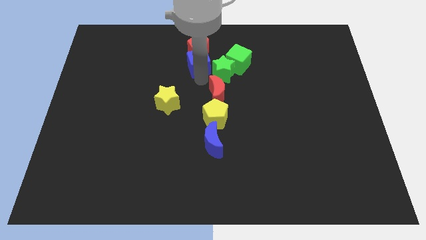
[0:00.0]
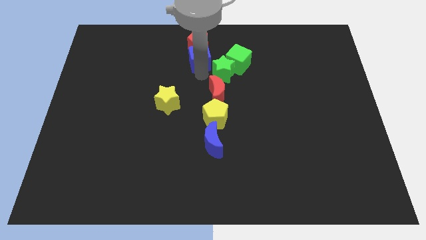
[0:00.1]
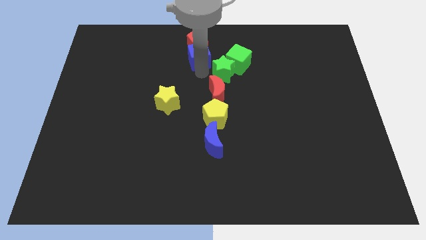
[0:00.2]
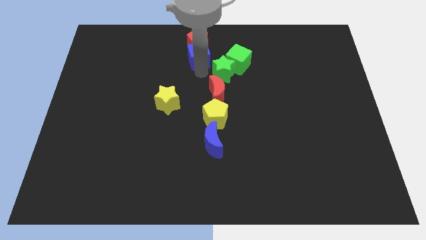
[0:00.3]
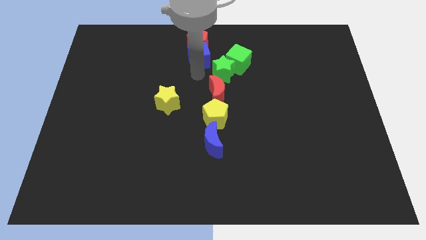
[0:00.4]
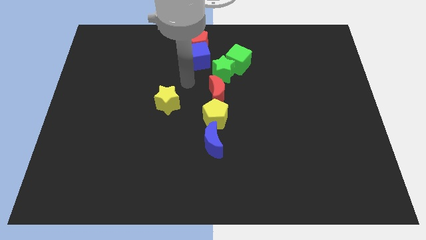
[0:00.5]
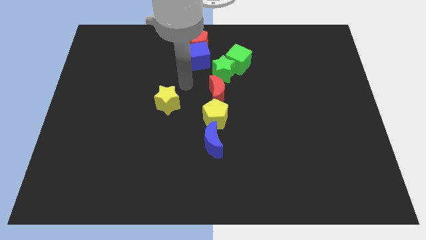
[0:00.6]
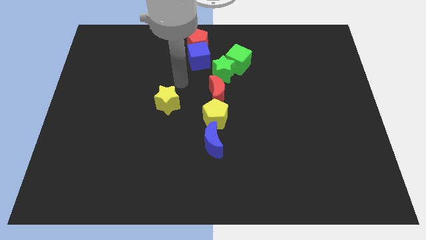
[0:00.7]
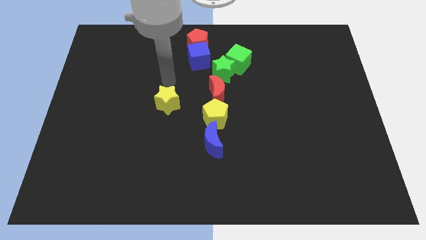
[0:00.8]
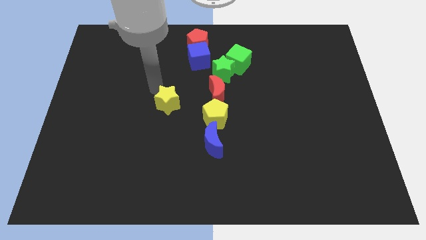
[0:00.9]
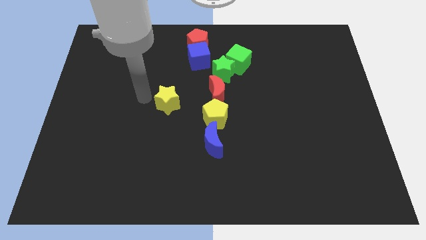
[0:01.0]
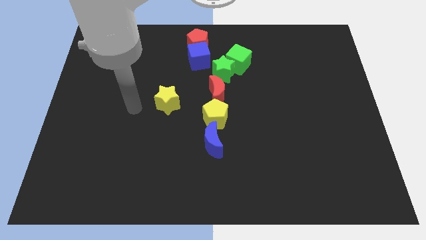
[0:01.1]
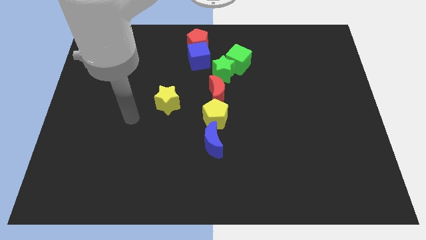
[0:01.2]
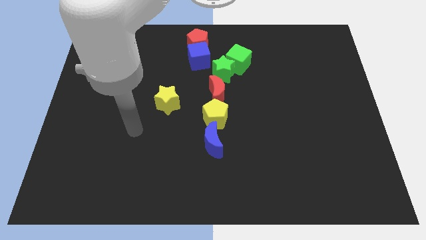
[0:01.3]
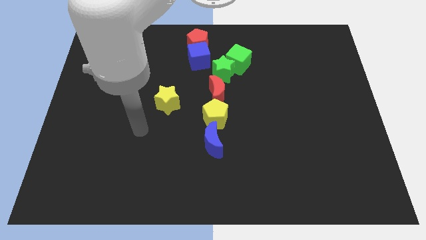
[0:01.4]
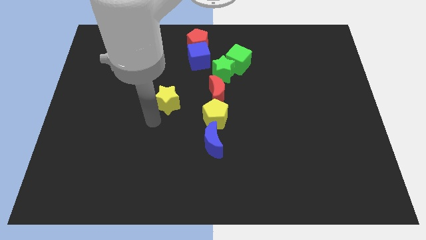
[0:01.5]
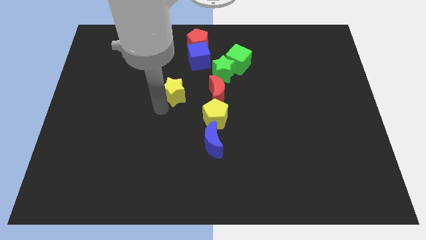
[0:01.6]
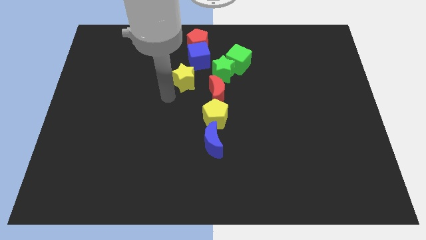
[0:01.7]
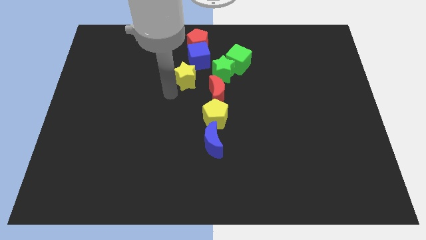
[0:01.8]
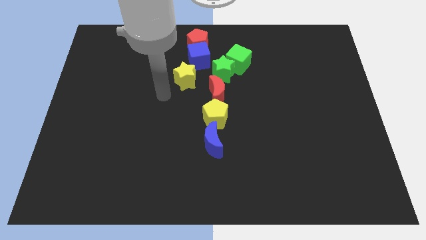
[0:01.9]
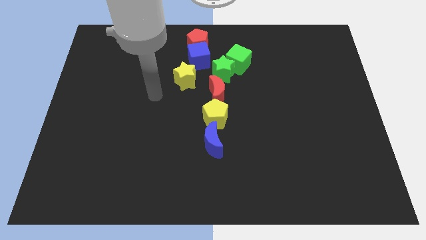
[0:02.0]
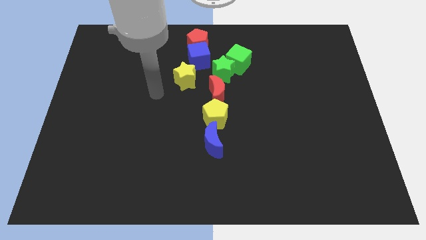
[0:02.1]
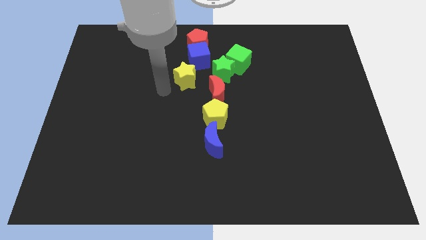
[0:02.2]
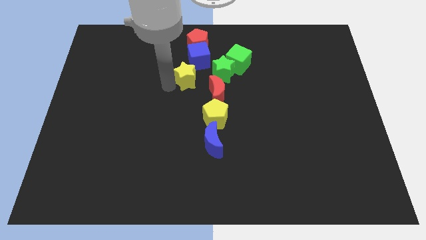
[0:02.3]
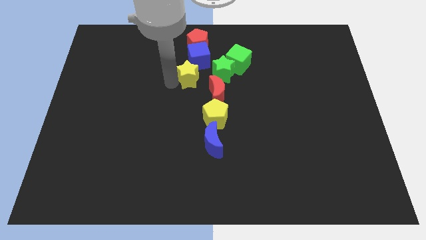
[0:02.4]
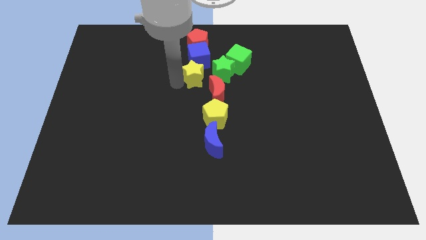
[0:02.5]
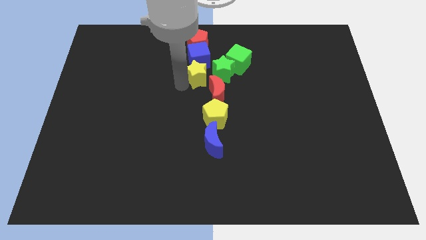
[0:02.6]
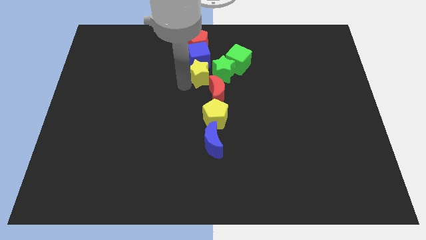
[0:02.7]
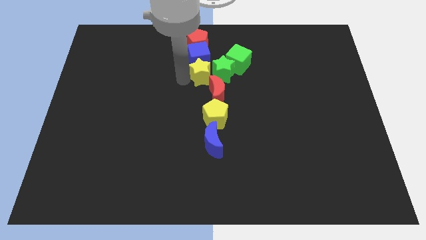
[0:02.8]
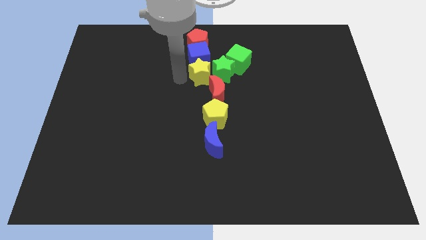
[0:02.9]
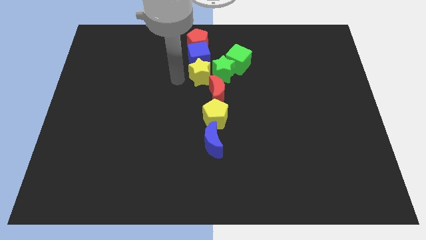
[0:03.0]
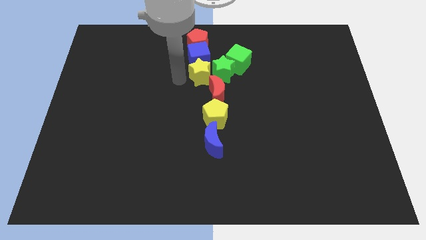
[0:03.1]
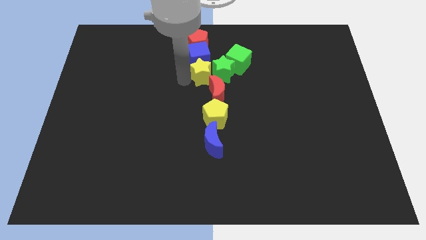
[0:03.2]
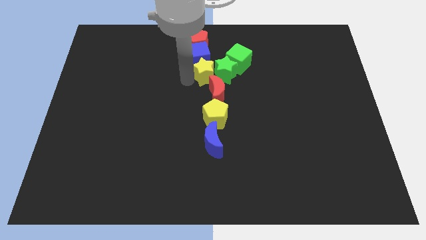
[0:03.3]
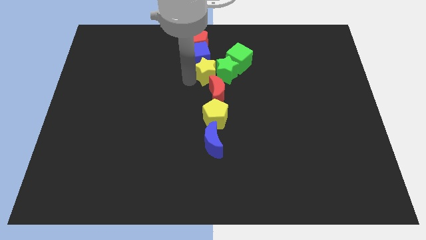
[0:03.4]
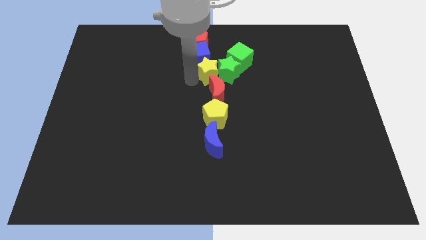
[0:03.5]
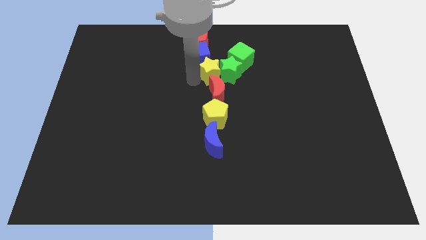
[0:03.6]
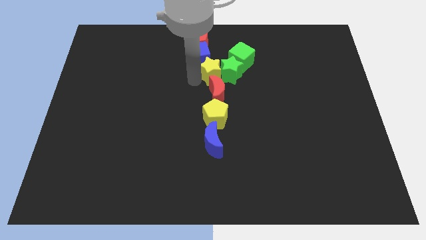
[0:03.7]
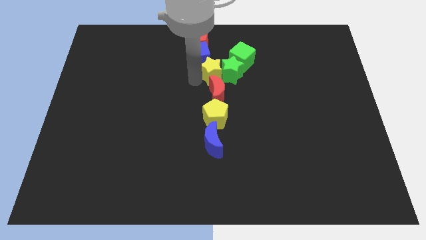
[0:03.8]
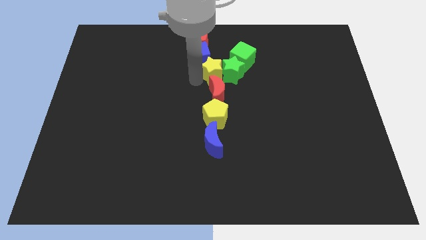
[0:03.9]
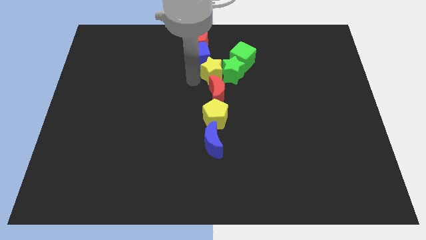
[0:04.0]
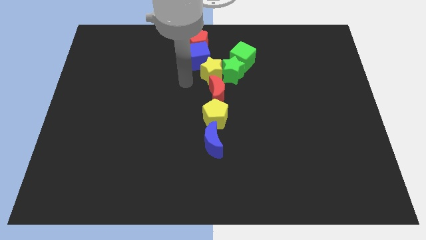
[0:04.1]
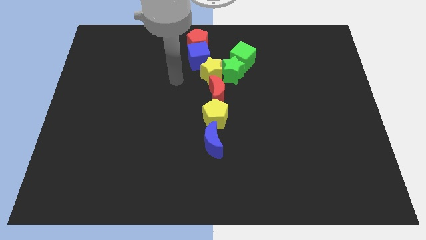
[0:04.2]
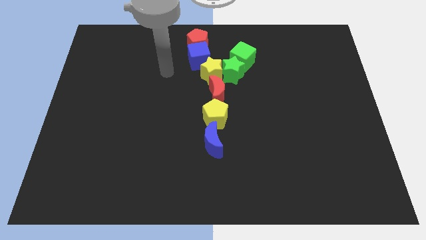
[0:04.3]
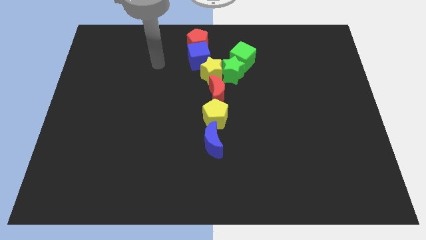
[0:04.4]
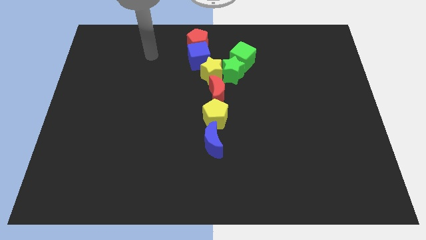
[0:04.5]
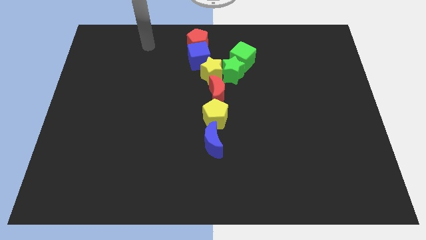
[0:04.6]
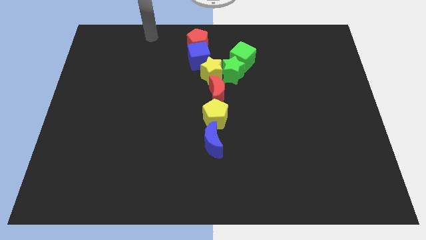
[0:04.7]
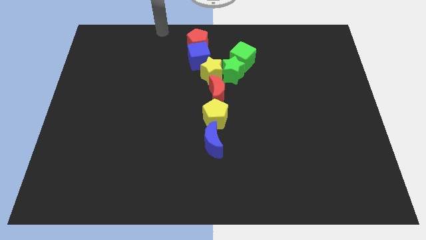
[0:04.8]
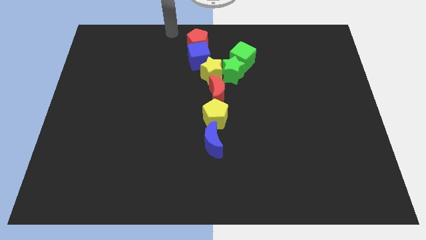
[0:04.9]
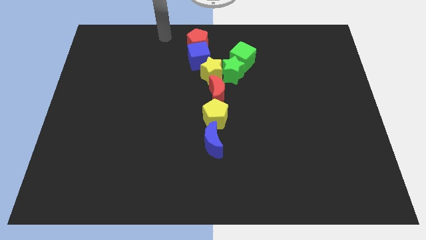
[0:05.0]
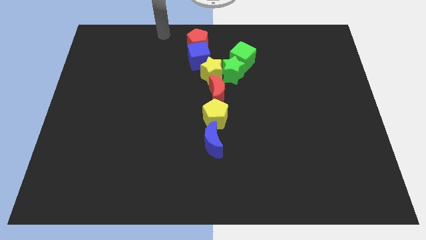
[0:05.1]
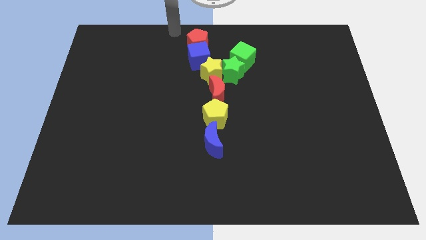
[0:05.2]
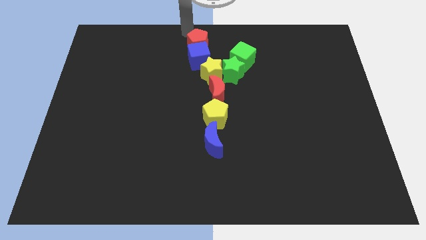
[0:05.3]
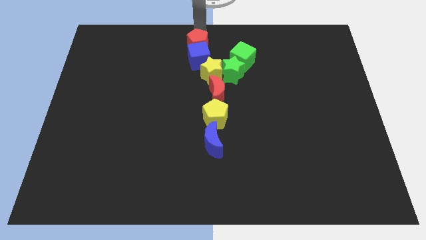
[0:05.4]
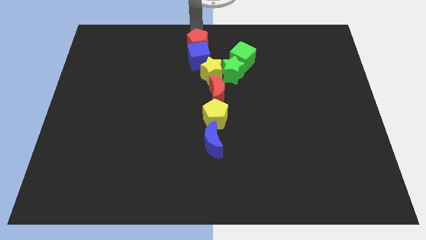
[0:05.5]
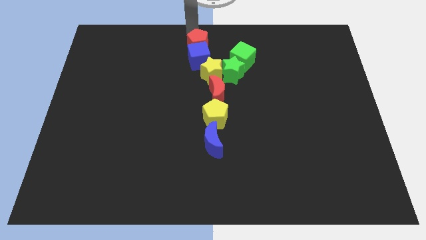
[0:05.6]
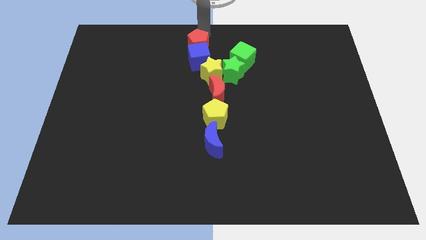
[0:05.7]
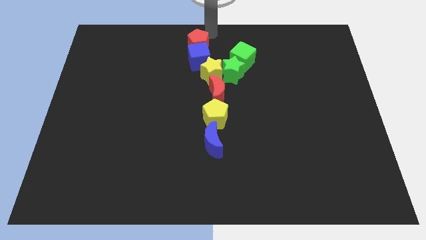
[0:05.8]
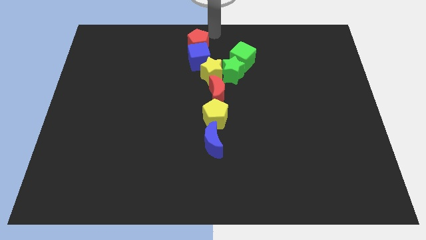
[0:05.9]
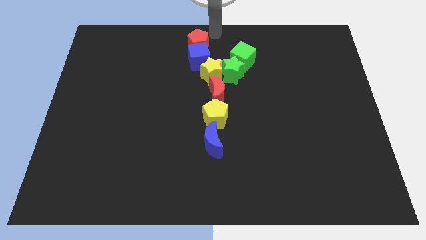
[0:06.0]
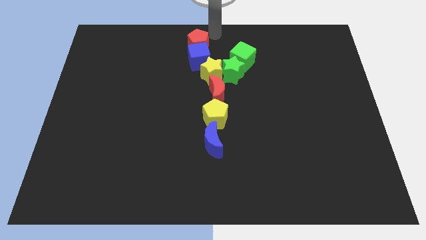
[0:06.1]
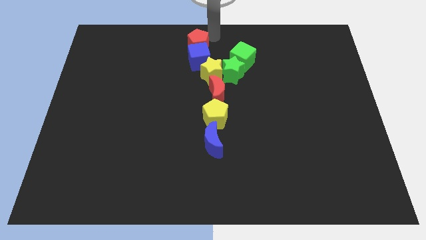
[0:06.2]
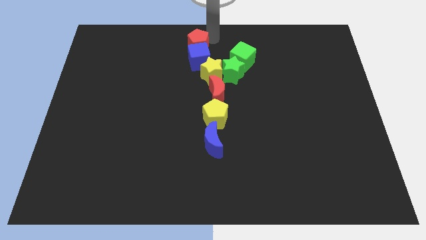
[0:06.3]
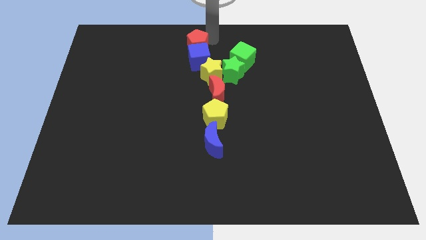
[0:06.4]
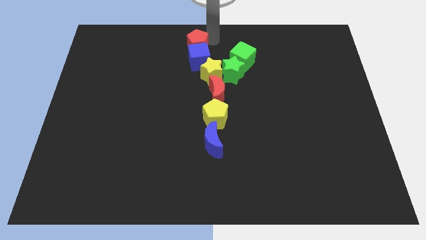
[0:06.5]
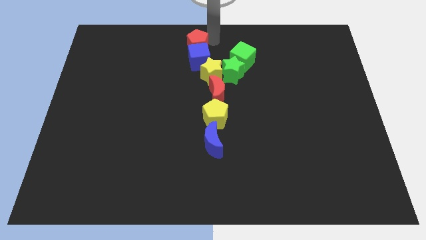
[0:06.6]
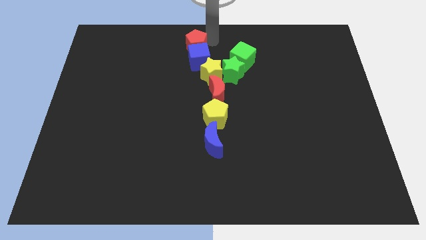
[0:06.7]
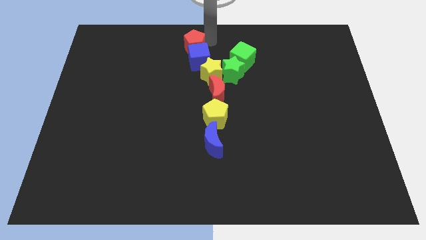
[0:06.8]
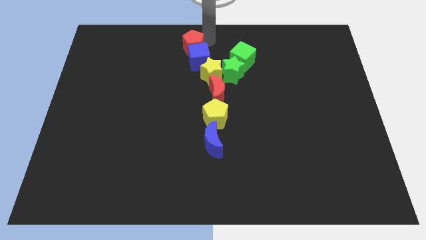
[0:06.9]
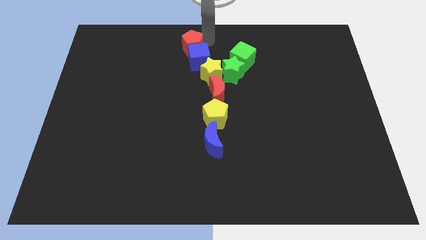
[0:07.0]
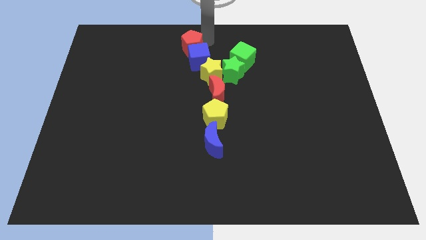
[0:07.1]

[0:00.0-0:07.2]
place the yellow star in the middle of the blue cube and the red moon

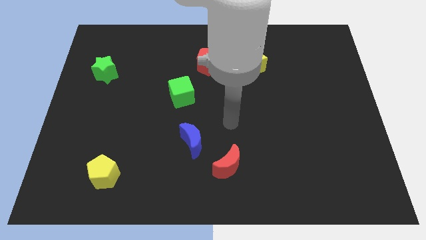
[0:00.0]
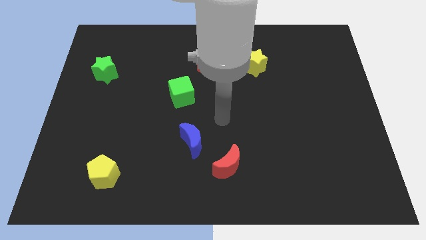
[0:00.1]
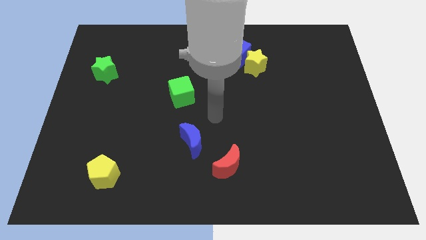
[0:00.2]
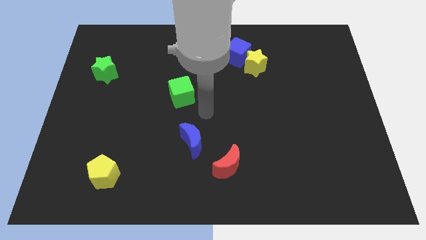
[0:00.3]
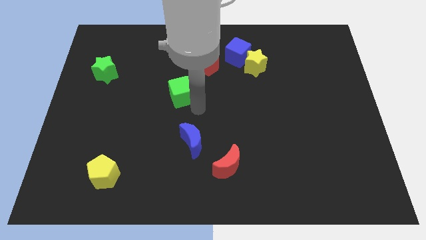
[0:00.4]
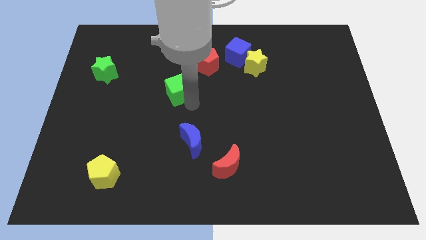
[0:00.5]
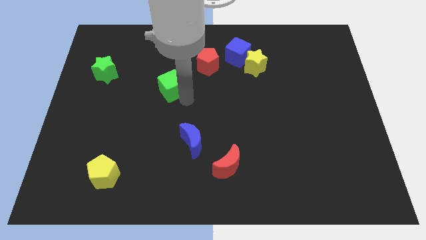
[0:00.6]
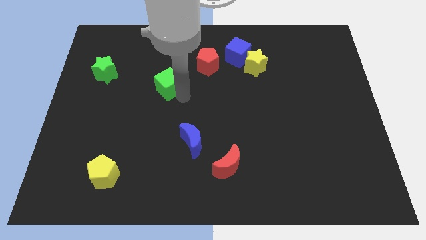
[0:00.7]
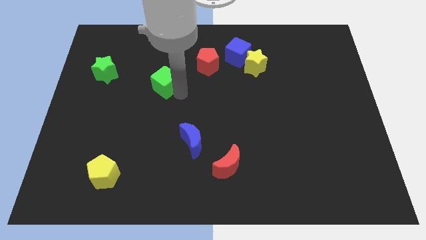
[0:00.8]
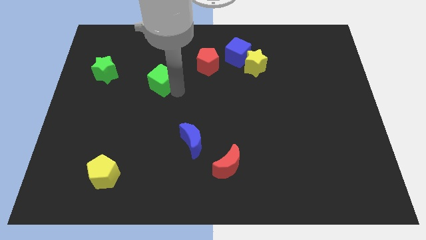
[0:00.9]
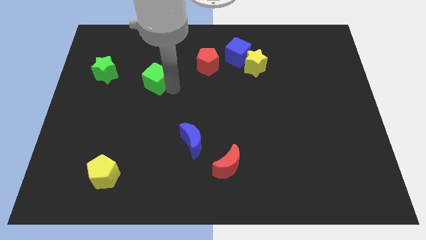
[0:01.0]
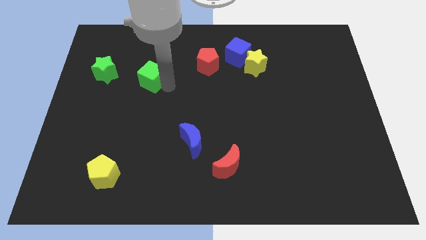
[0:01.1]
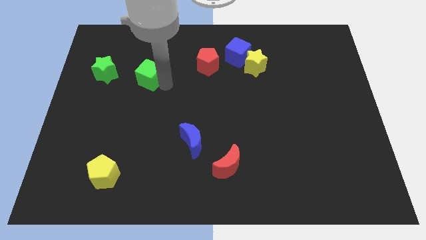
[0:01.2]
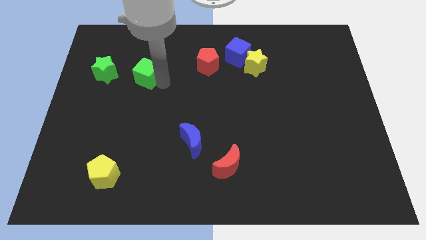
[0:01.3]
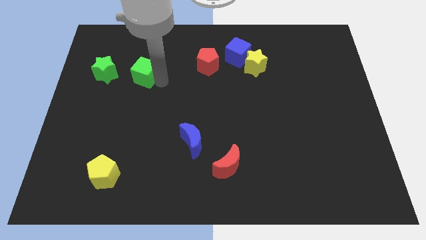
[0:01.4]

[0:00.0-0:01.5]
move the green cube to the right side of the green star

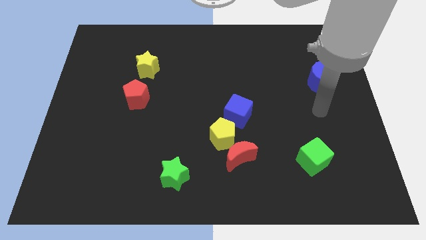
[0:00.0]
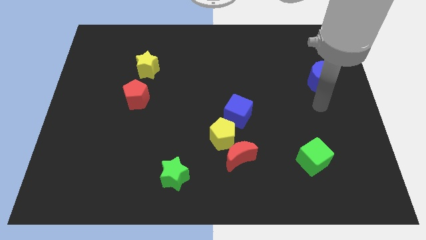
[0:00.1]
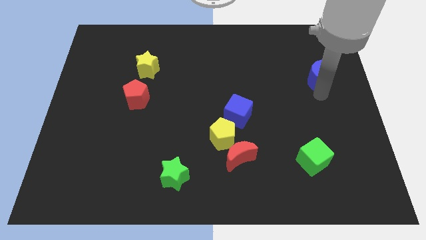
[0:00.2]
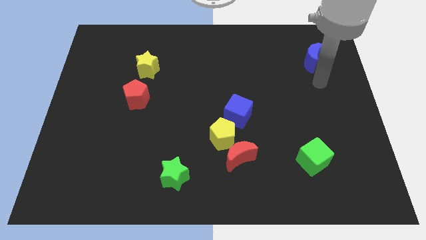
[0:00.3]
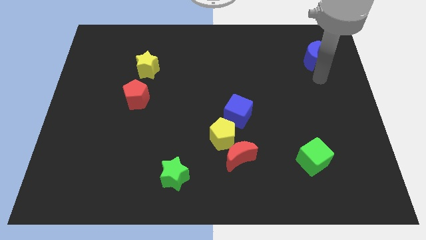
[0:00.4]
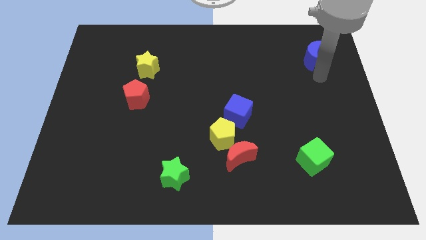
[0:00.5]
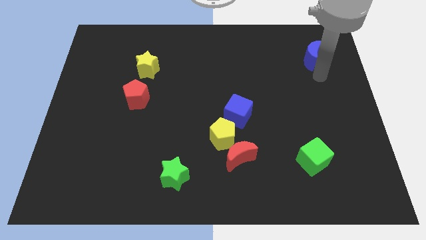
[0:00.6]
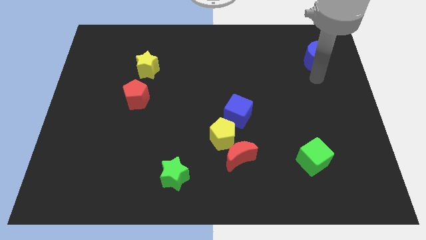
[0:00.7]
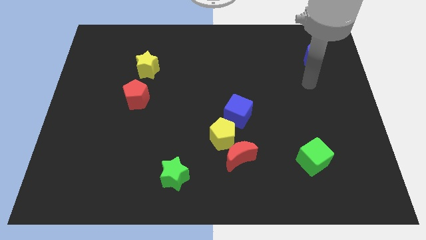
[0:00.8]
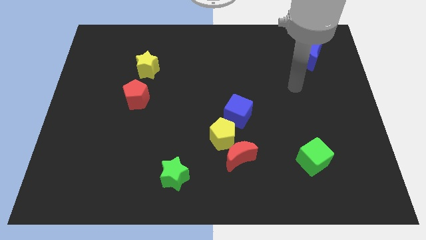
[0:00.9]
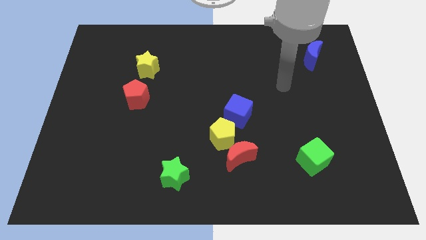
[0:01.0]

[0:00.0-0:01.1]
push the blue crescent towards the top side of the board
